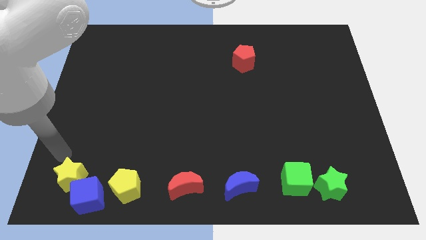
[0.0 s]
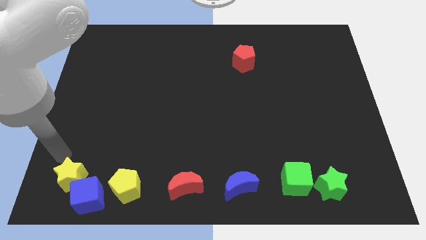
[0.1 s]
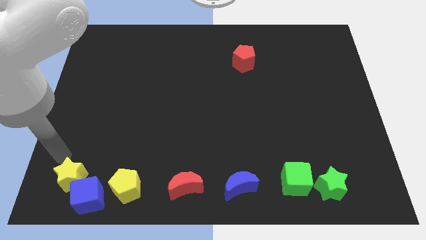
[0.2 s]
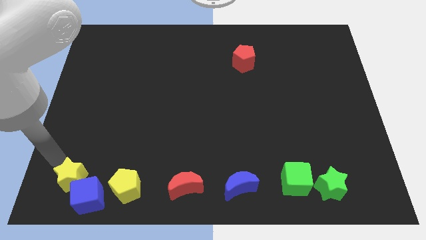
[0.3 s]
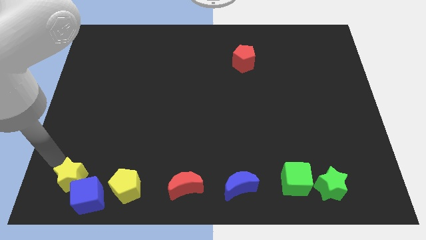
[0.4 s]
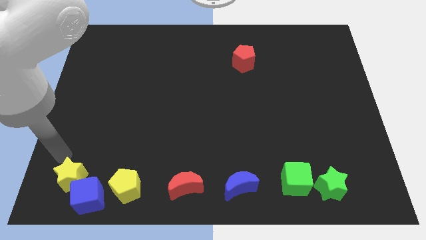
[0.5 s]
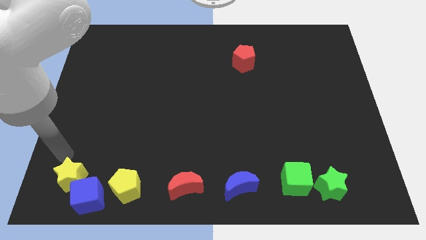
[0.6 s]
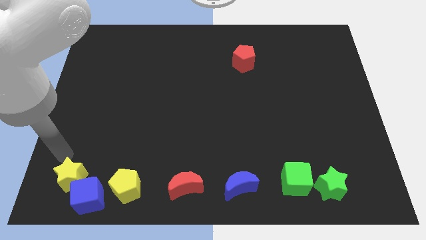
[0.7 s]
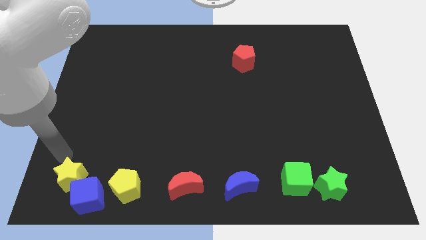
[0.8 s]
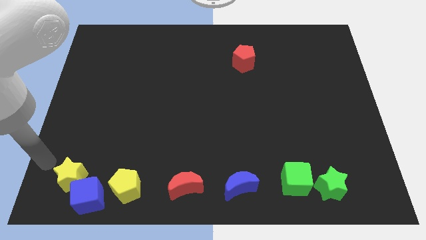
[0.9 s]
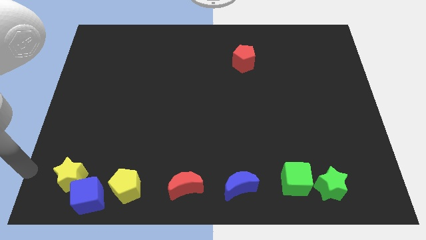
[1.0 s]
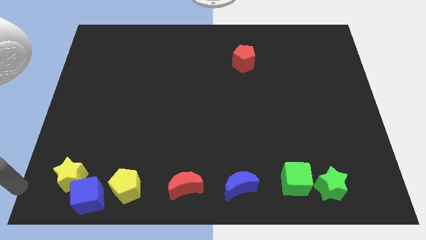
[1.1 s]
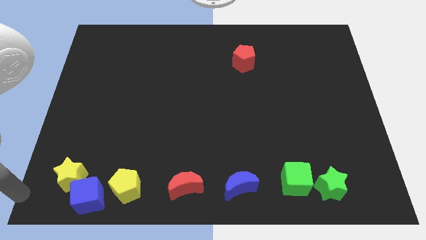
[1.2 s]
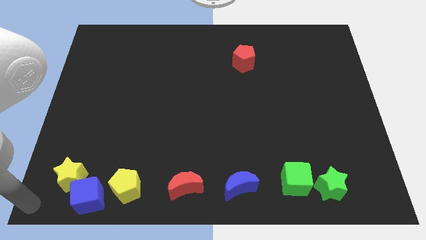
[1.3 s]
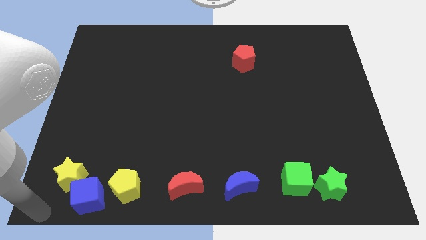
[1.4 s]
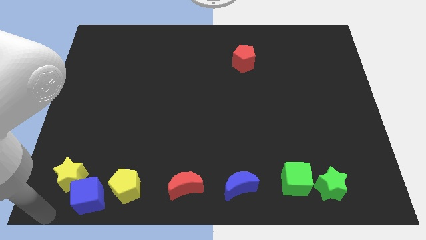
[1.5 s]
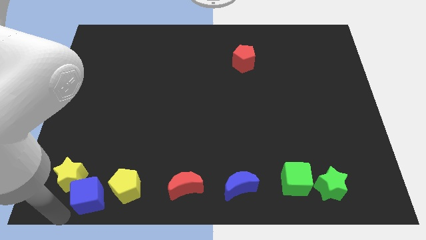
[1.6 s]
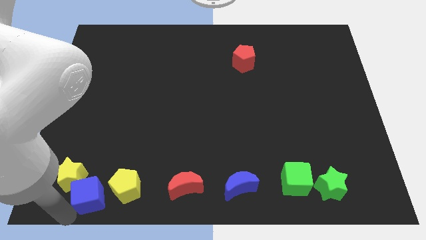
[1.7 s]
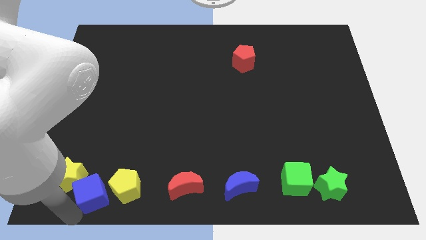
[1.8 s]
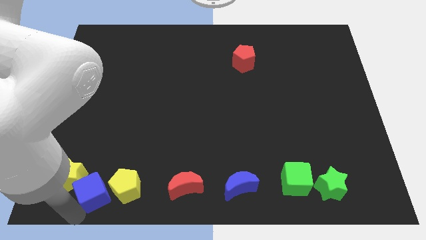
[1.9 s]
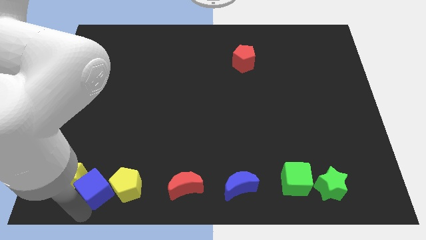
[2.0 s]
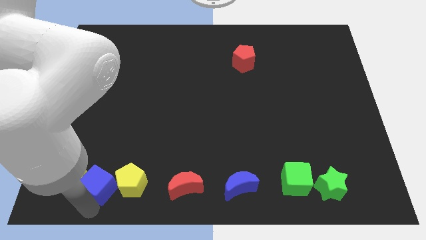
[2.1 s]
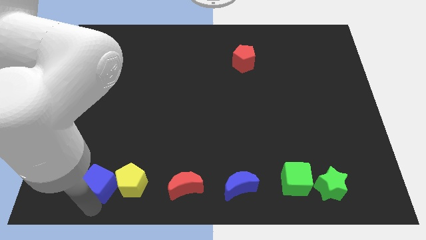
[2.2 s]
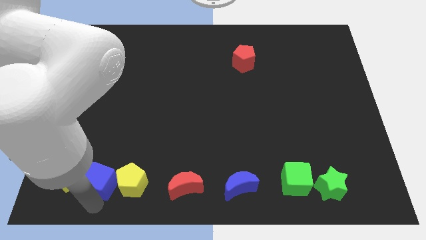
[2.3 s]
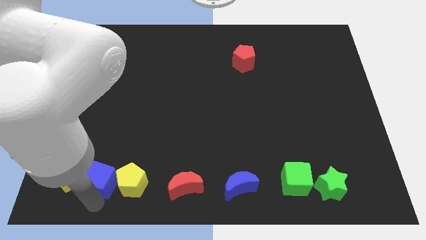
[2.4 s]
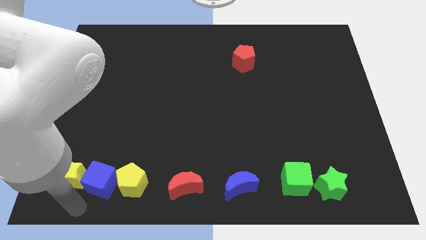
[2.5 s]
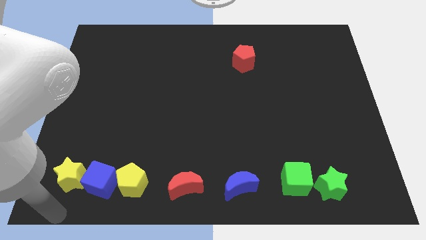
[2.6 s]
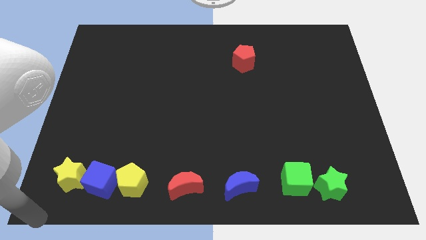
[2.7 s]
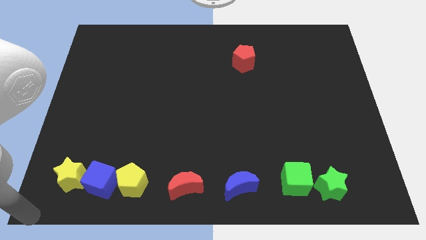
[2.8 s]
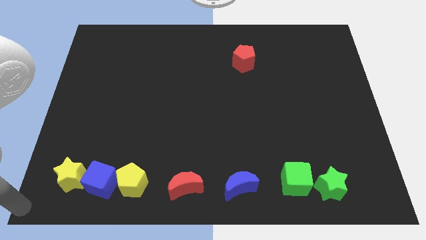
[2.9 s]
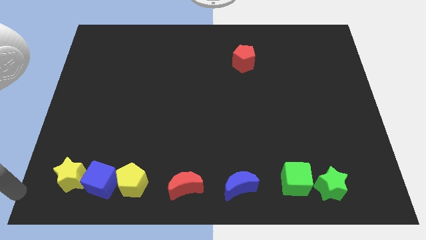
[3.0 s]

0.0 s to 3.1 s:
slide blue cube slightly up in between yellow blocks

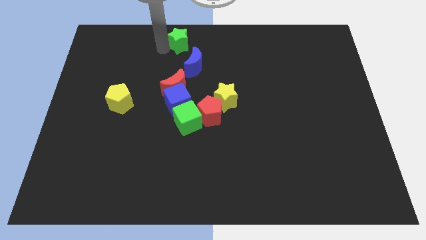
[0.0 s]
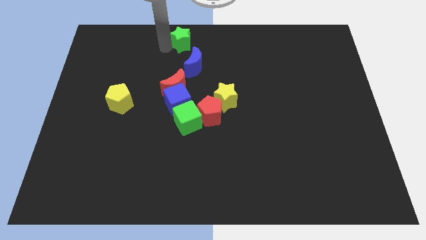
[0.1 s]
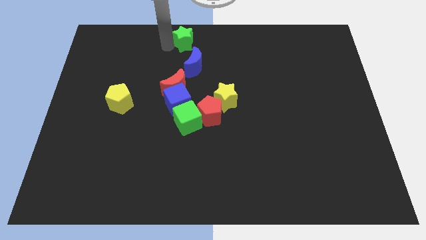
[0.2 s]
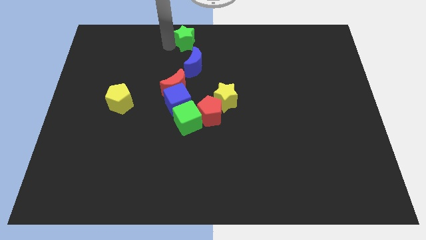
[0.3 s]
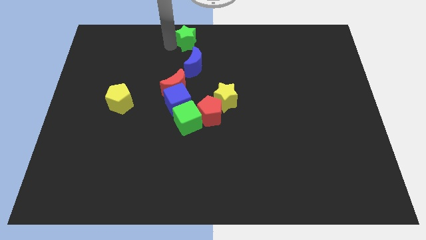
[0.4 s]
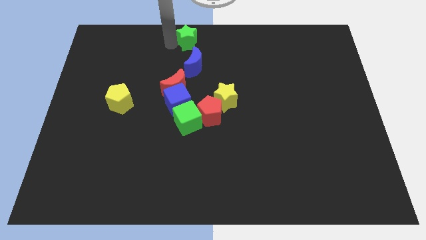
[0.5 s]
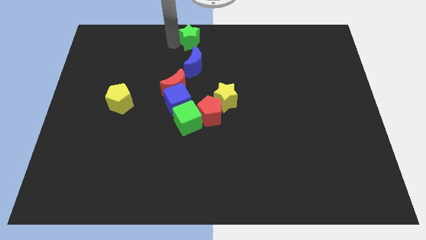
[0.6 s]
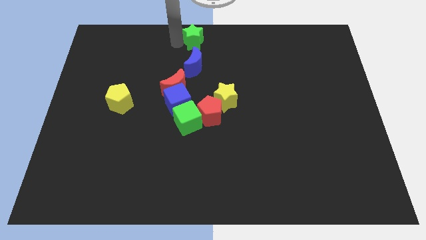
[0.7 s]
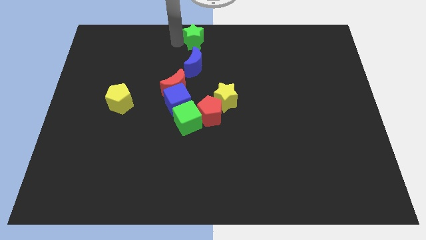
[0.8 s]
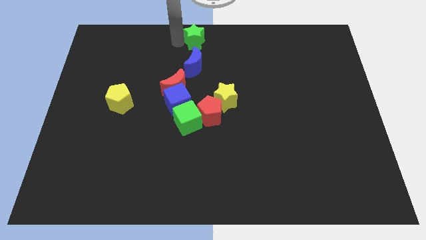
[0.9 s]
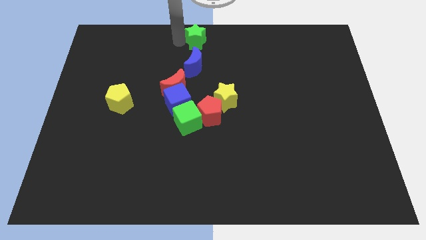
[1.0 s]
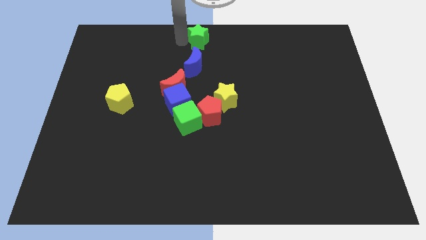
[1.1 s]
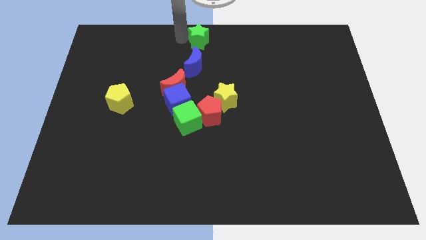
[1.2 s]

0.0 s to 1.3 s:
move the green star to the top of the blue moon

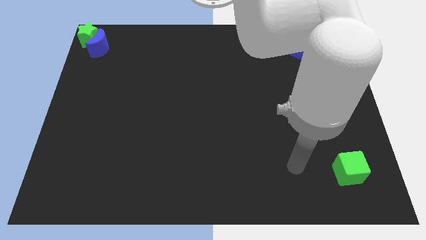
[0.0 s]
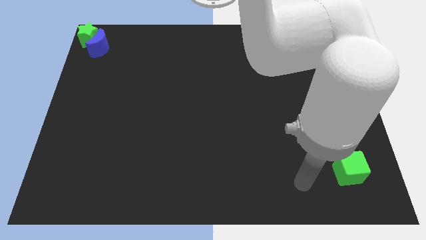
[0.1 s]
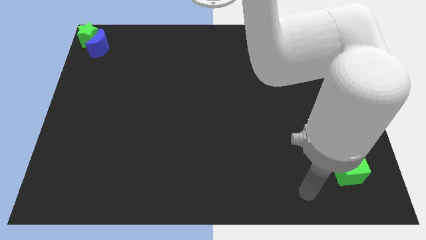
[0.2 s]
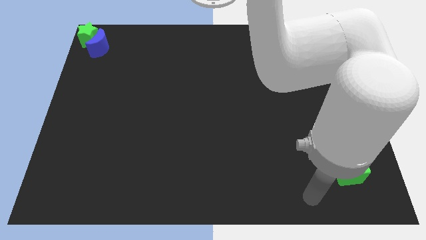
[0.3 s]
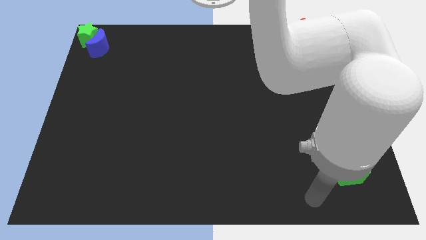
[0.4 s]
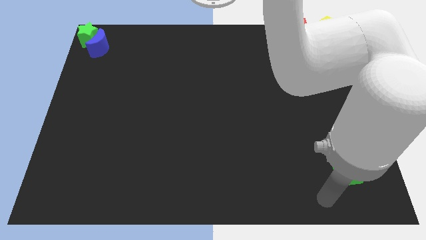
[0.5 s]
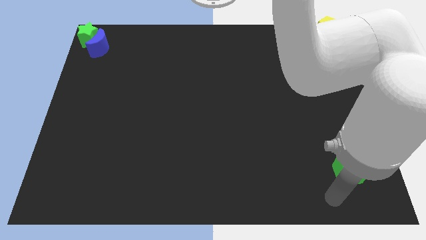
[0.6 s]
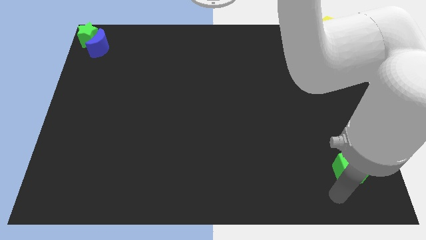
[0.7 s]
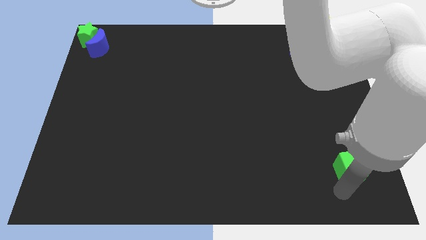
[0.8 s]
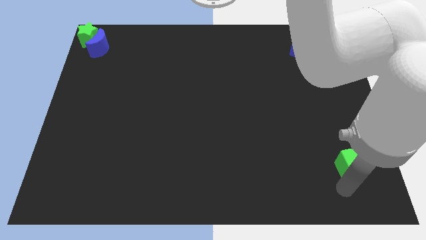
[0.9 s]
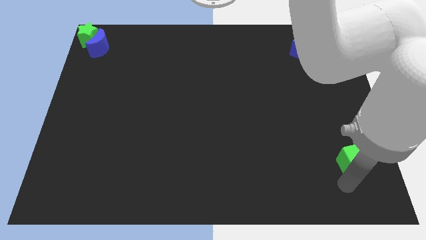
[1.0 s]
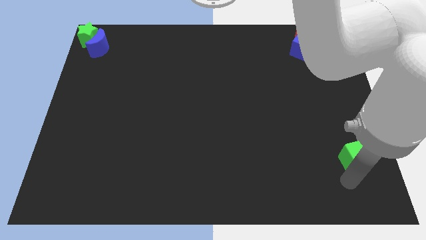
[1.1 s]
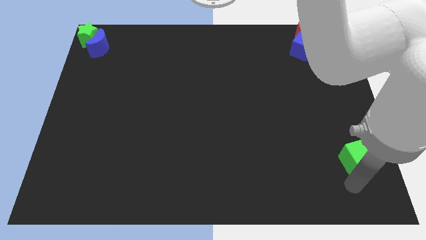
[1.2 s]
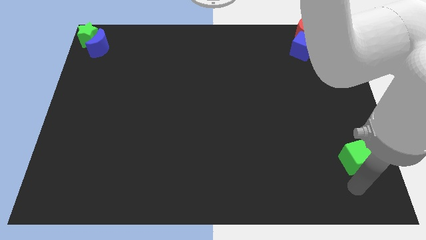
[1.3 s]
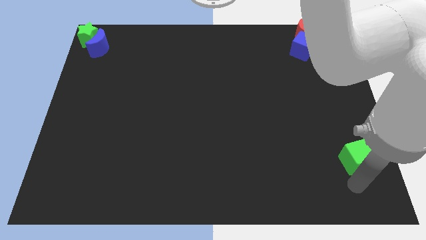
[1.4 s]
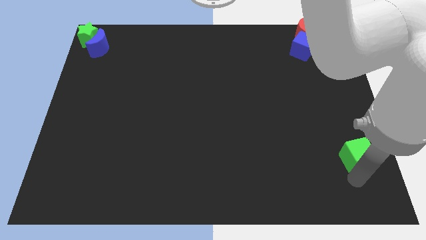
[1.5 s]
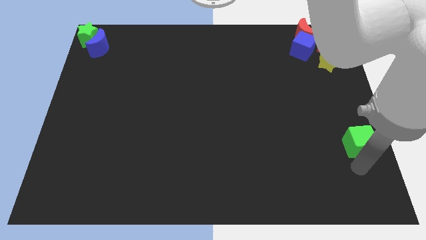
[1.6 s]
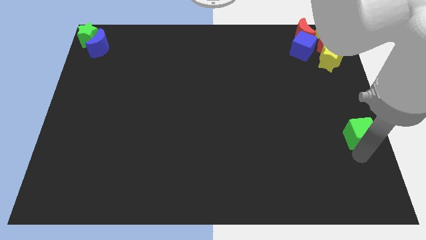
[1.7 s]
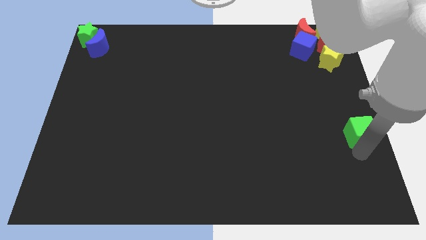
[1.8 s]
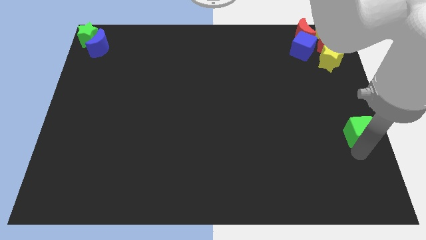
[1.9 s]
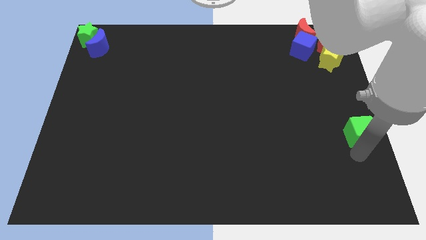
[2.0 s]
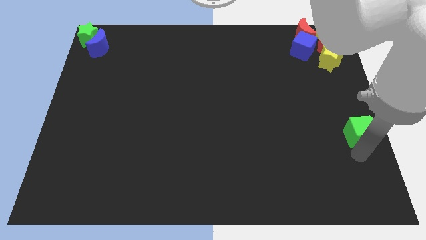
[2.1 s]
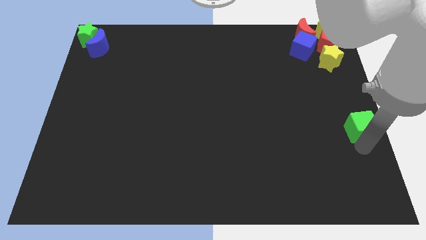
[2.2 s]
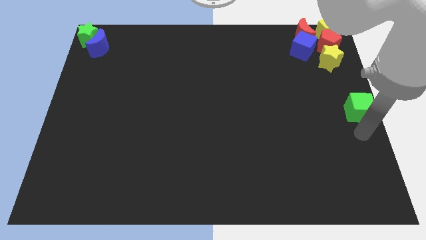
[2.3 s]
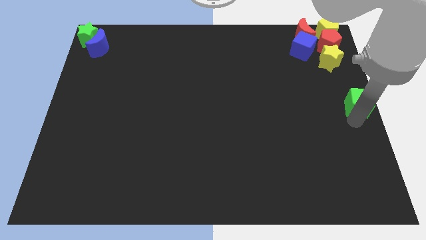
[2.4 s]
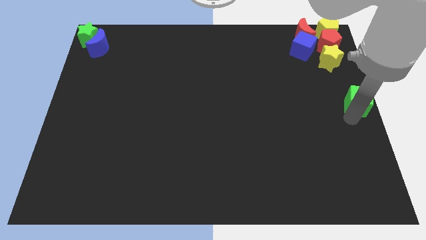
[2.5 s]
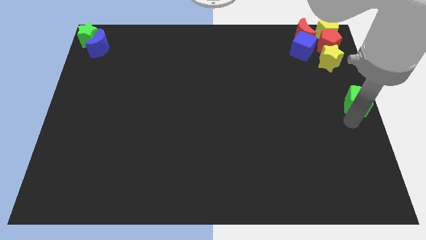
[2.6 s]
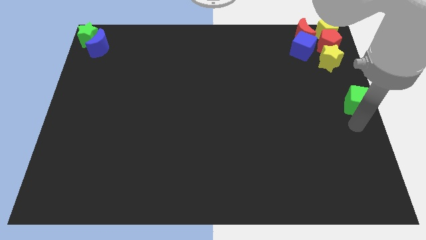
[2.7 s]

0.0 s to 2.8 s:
push the green cube to the center right of the board

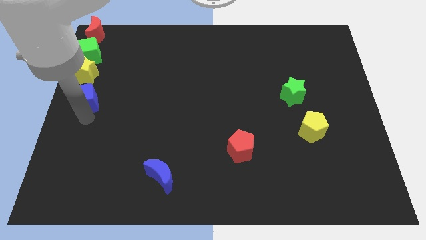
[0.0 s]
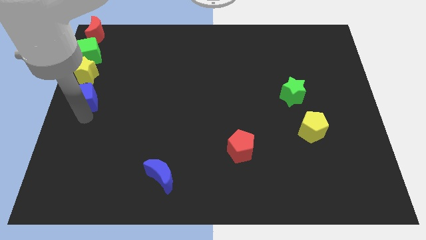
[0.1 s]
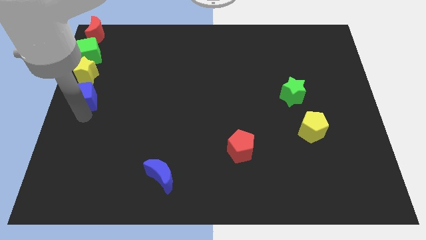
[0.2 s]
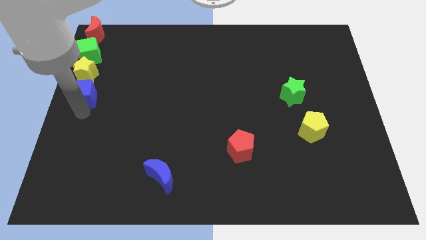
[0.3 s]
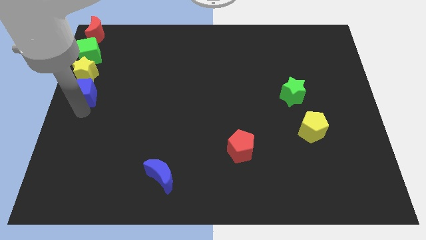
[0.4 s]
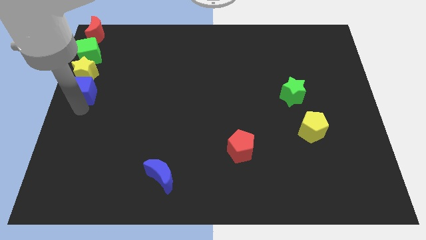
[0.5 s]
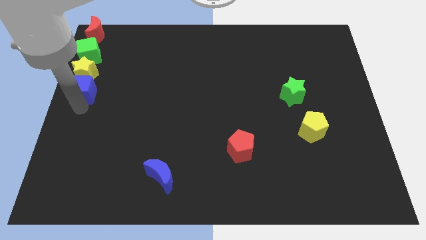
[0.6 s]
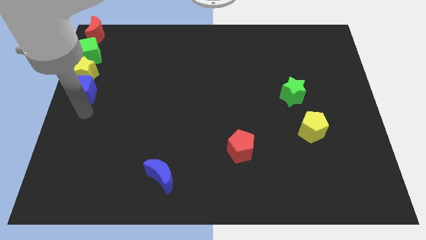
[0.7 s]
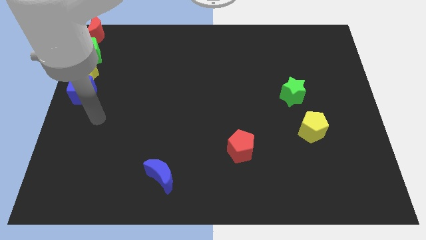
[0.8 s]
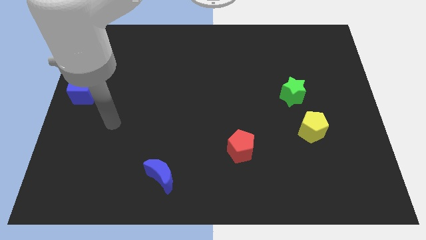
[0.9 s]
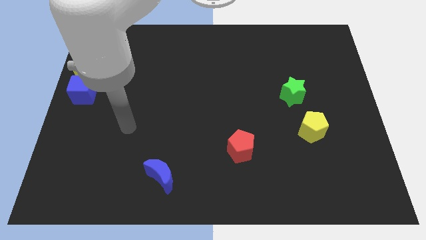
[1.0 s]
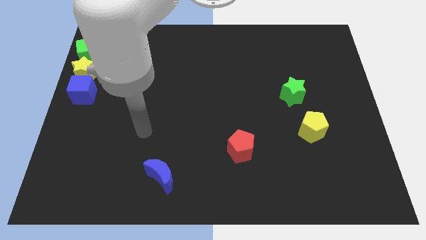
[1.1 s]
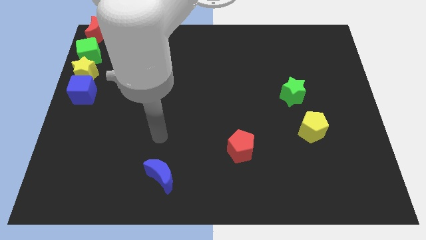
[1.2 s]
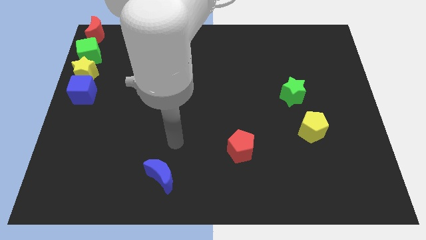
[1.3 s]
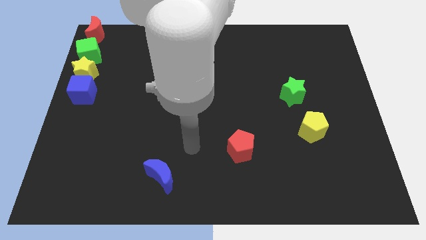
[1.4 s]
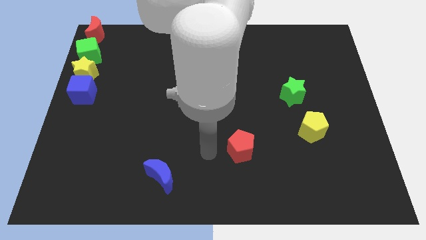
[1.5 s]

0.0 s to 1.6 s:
place the blue cube below the yellow star
